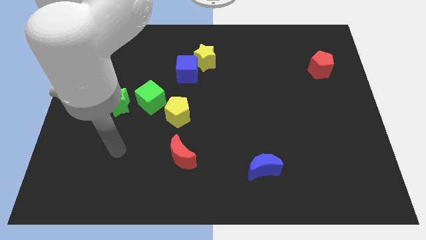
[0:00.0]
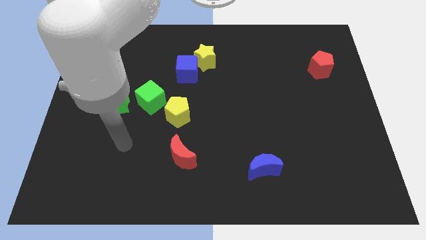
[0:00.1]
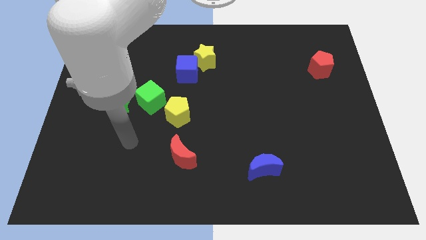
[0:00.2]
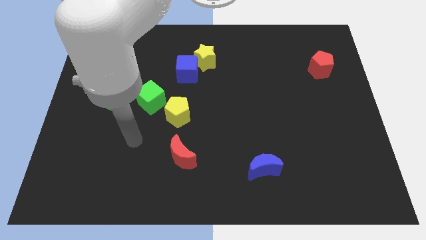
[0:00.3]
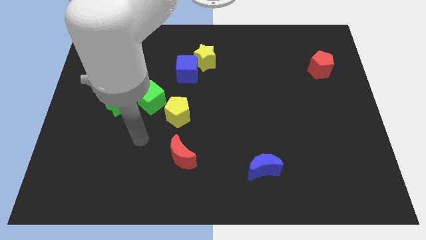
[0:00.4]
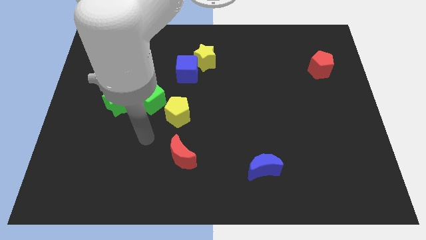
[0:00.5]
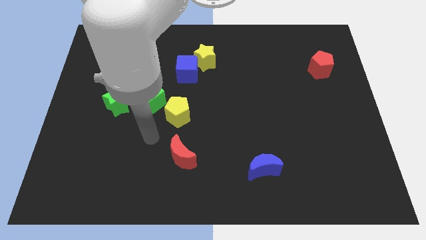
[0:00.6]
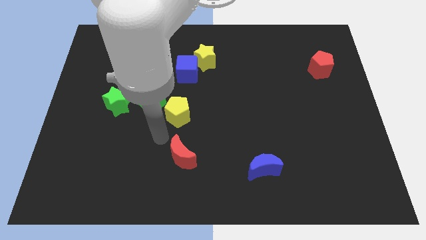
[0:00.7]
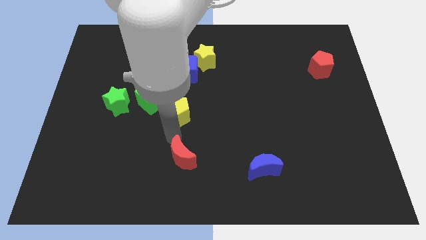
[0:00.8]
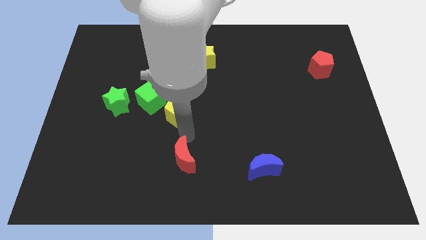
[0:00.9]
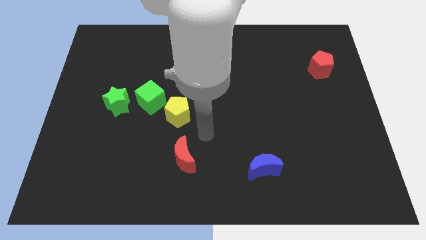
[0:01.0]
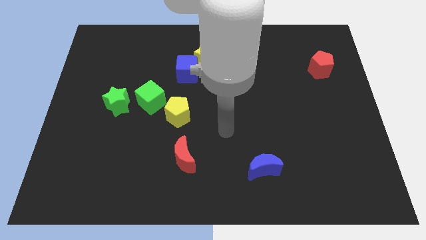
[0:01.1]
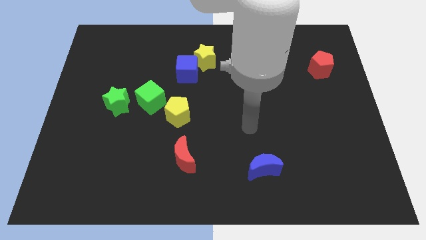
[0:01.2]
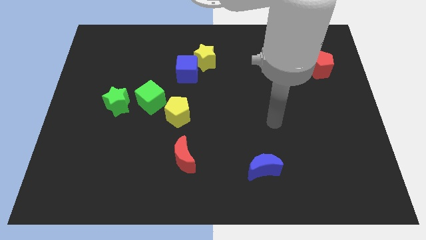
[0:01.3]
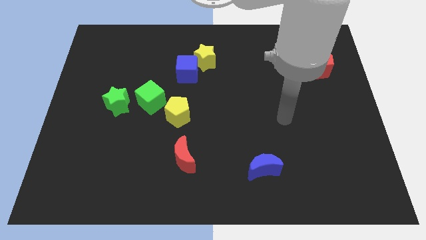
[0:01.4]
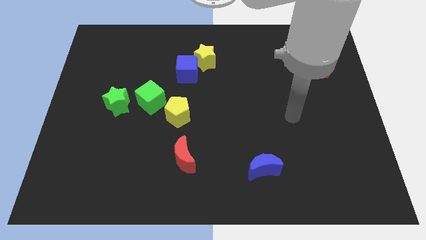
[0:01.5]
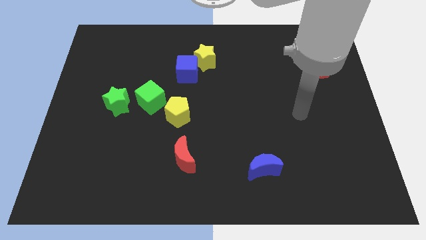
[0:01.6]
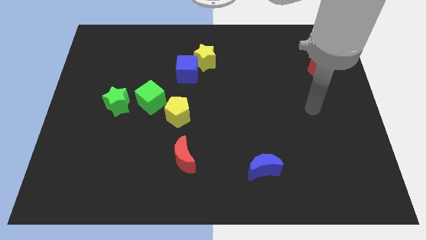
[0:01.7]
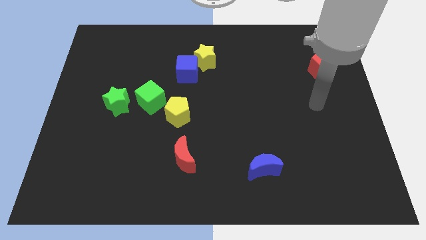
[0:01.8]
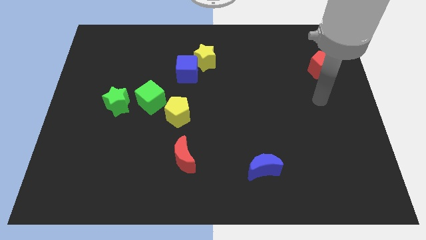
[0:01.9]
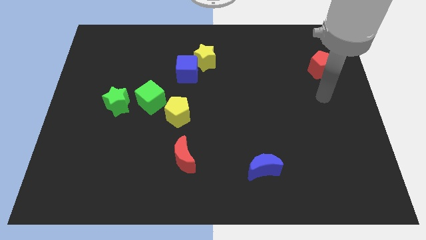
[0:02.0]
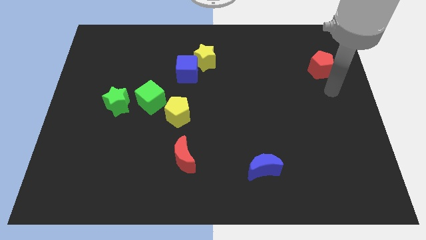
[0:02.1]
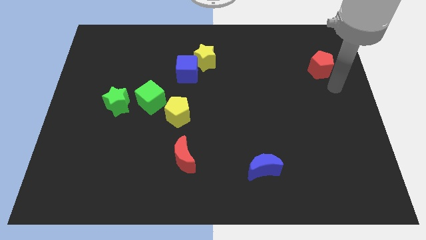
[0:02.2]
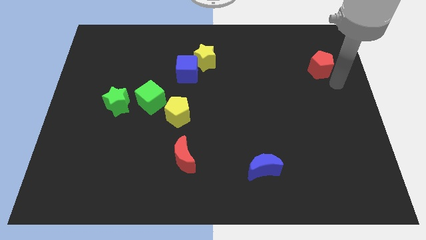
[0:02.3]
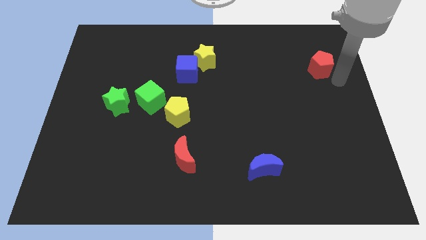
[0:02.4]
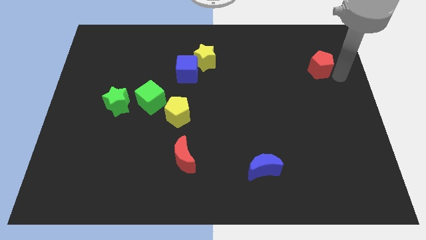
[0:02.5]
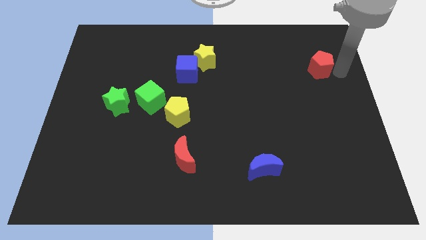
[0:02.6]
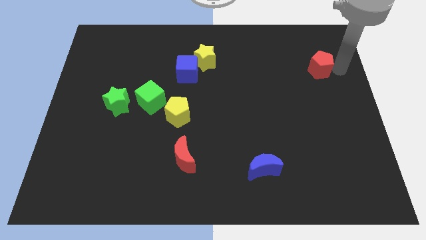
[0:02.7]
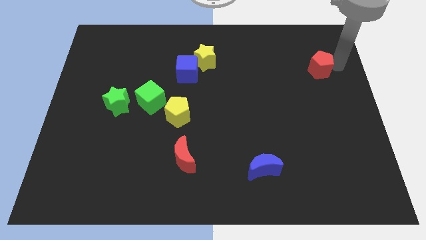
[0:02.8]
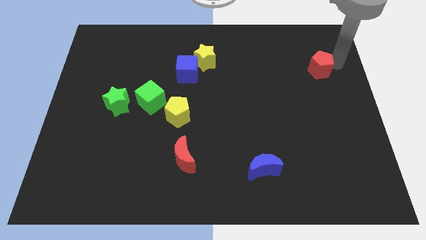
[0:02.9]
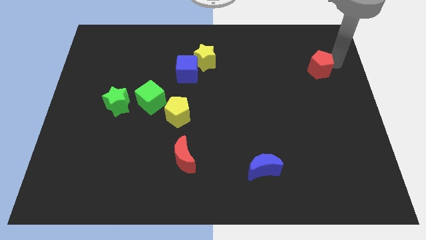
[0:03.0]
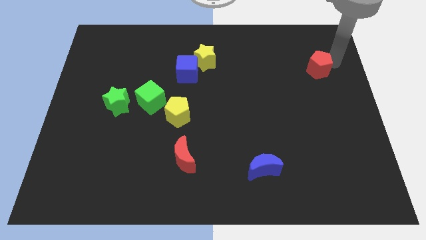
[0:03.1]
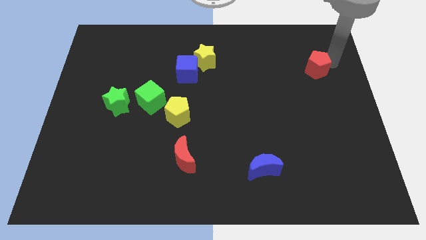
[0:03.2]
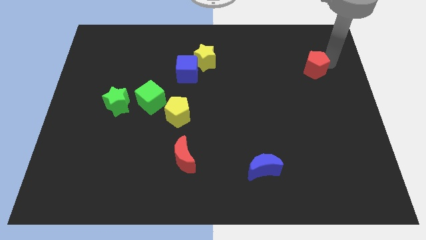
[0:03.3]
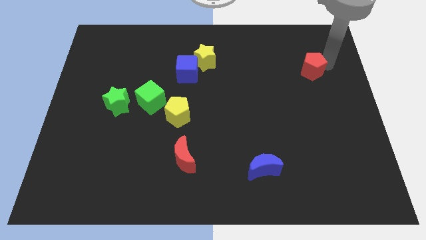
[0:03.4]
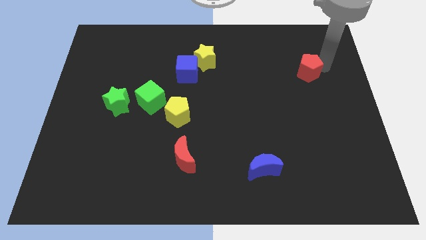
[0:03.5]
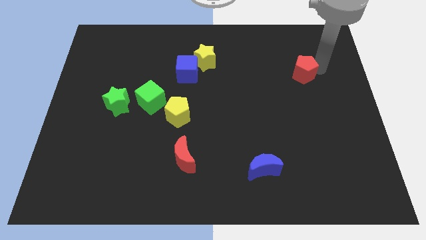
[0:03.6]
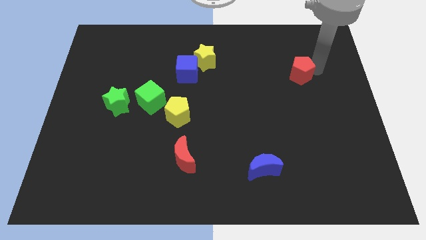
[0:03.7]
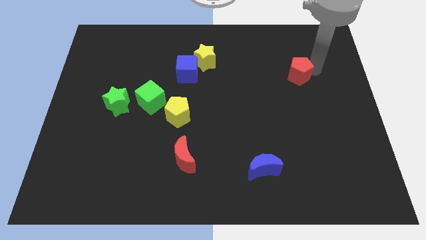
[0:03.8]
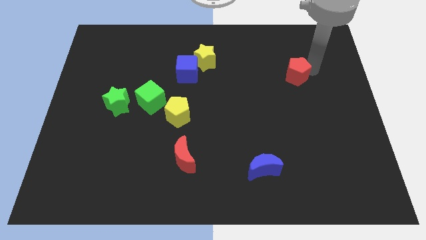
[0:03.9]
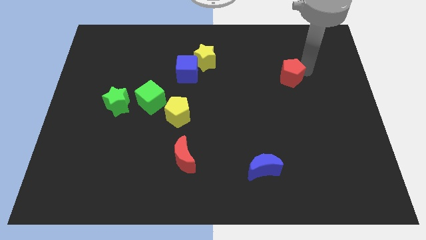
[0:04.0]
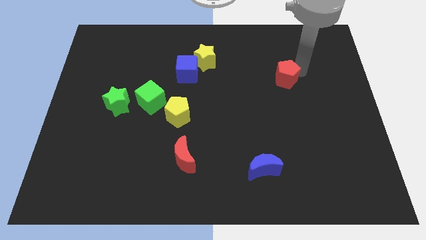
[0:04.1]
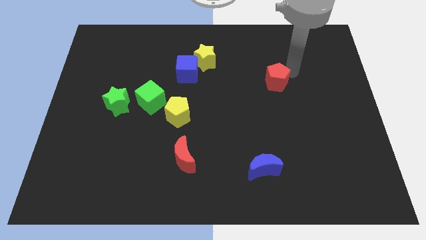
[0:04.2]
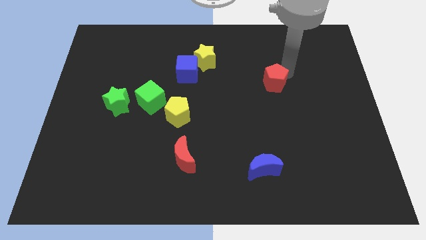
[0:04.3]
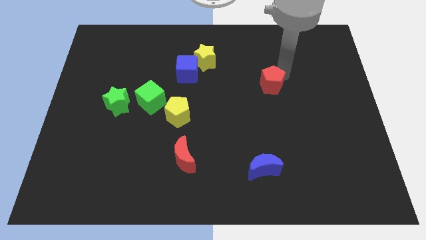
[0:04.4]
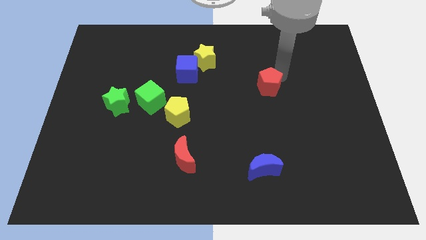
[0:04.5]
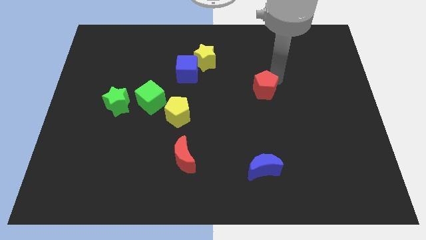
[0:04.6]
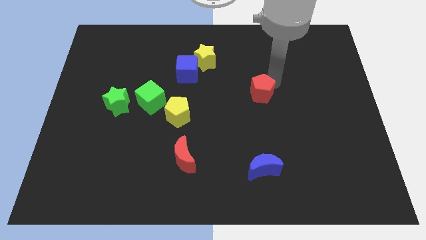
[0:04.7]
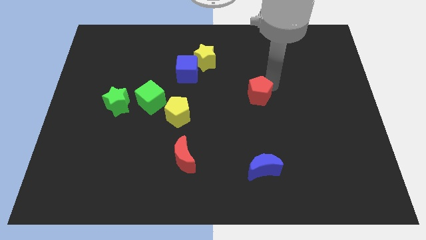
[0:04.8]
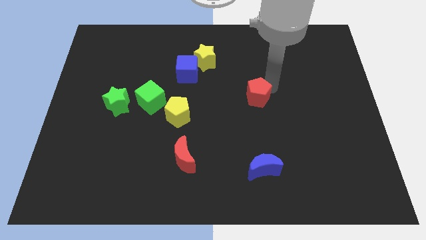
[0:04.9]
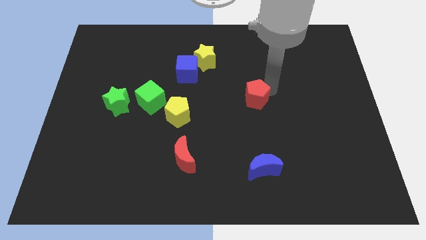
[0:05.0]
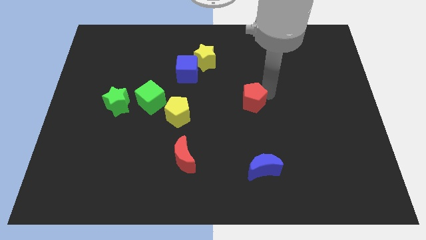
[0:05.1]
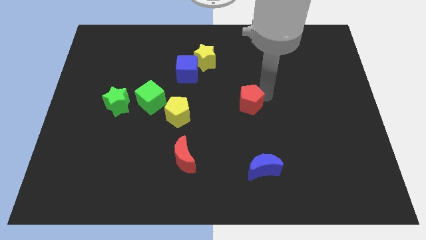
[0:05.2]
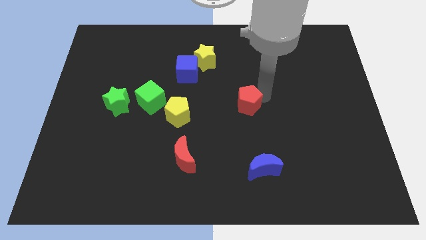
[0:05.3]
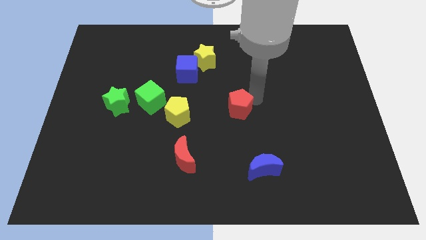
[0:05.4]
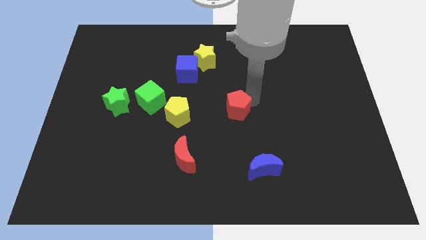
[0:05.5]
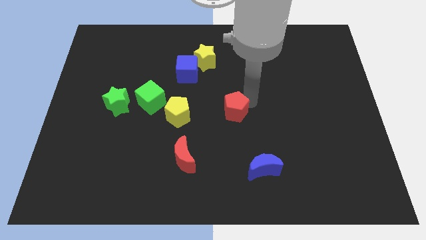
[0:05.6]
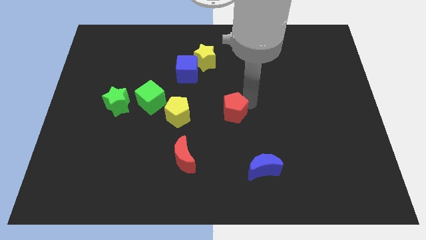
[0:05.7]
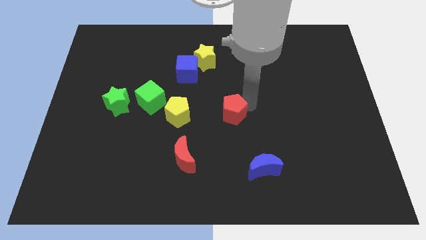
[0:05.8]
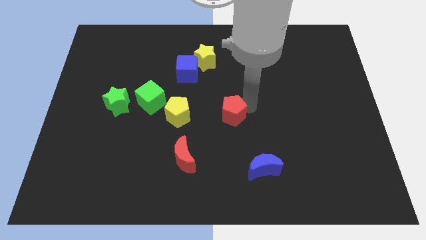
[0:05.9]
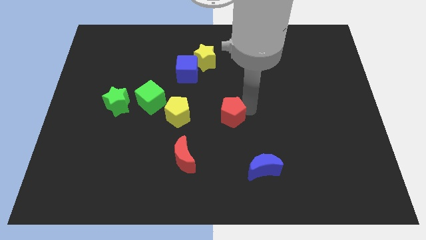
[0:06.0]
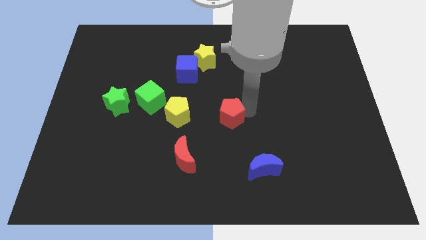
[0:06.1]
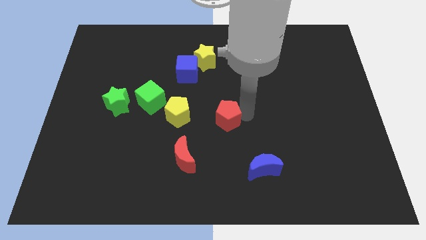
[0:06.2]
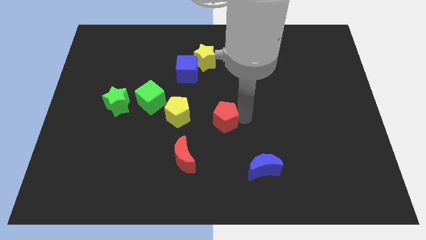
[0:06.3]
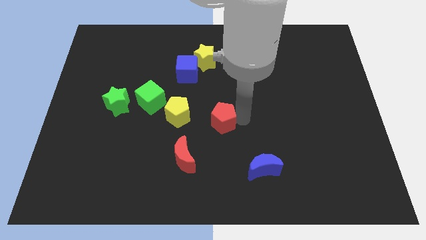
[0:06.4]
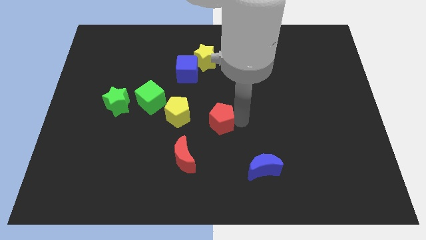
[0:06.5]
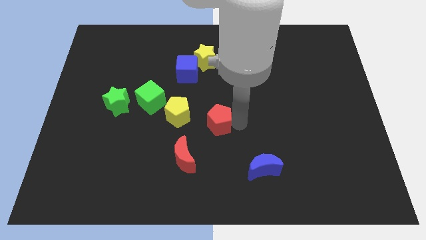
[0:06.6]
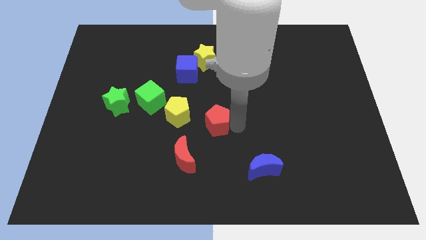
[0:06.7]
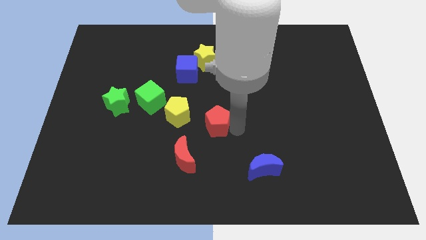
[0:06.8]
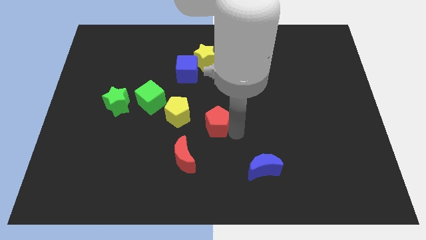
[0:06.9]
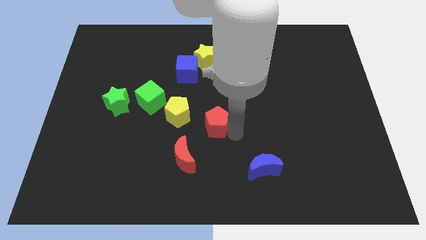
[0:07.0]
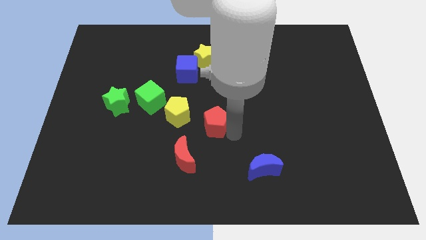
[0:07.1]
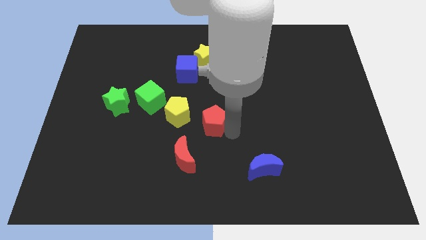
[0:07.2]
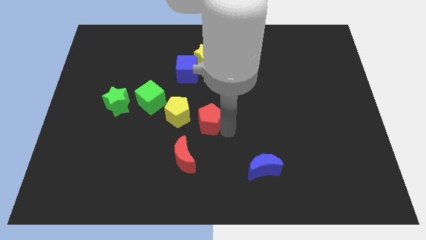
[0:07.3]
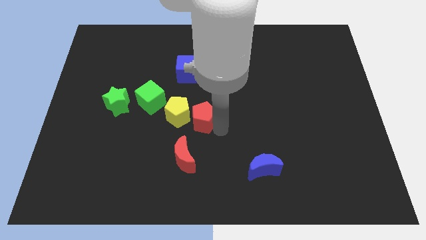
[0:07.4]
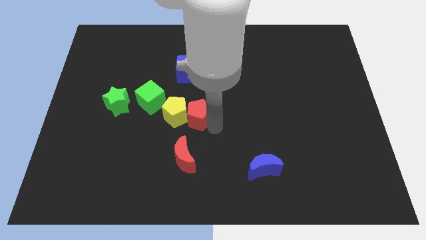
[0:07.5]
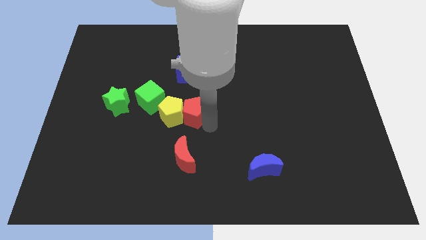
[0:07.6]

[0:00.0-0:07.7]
slide the red pentagon towards the yellow pentagon
